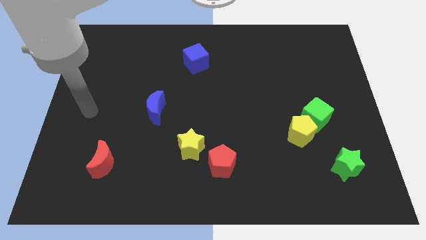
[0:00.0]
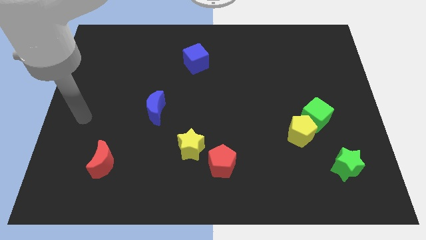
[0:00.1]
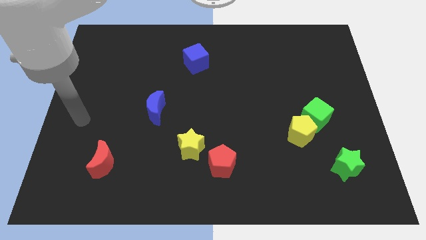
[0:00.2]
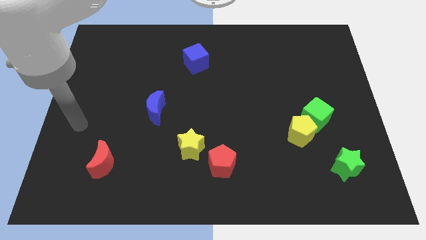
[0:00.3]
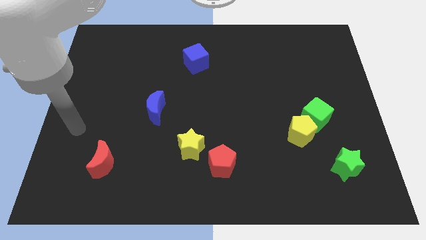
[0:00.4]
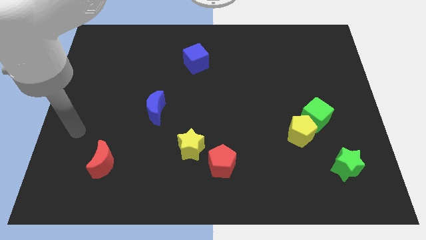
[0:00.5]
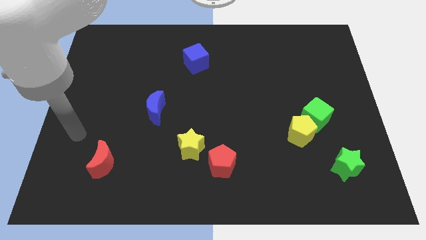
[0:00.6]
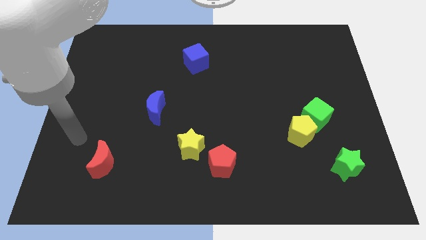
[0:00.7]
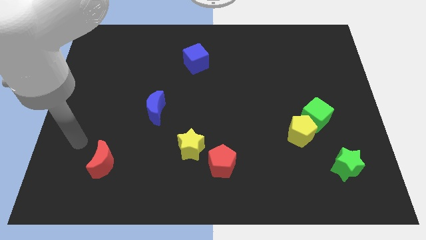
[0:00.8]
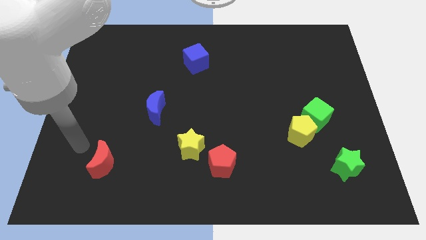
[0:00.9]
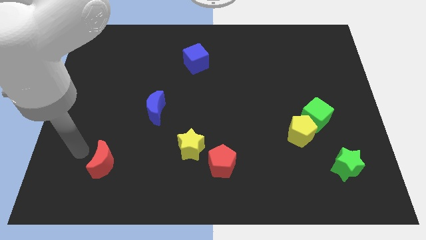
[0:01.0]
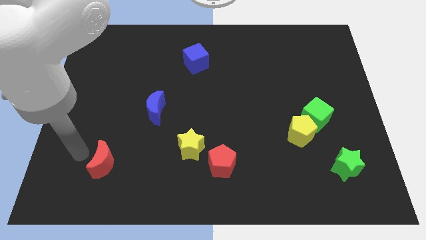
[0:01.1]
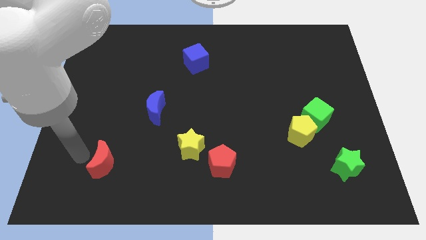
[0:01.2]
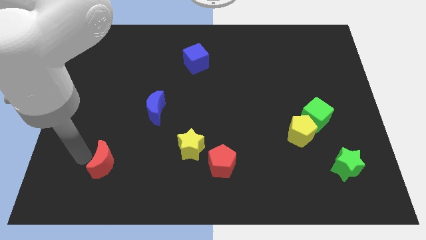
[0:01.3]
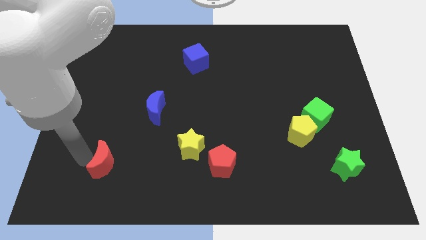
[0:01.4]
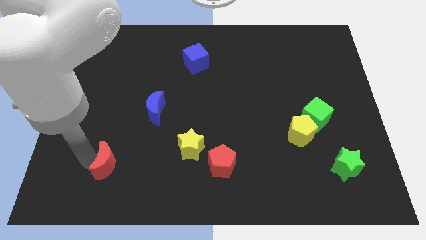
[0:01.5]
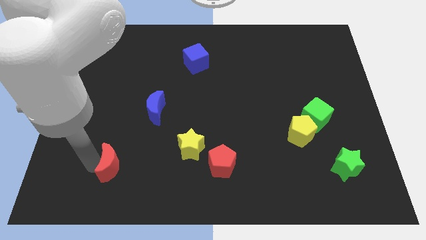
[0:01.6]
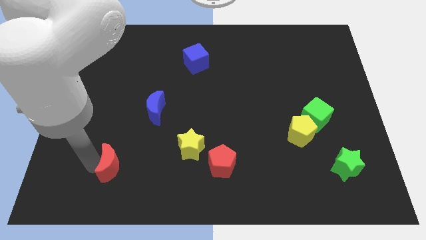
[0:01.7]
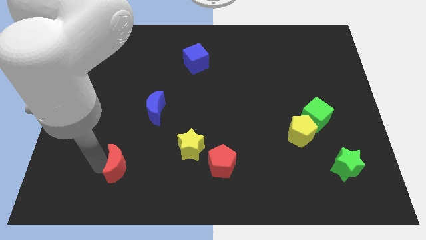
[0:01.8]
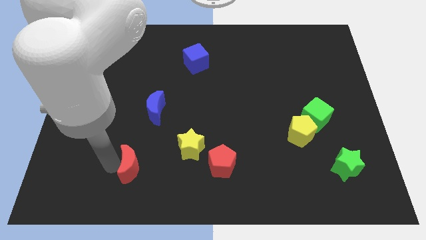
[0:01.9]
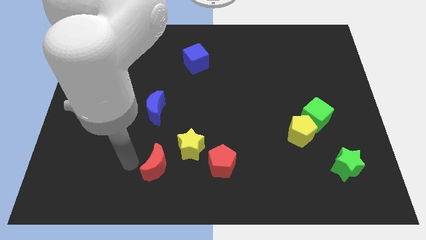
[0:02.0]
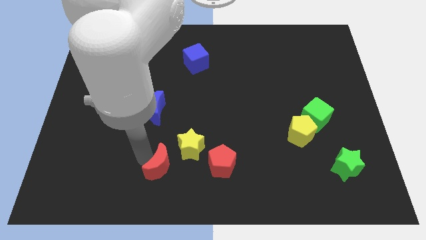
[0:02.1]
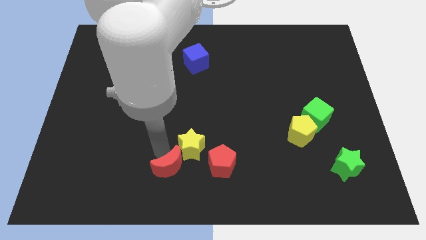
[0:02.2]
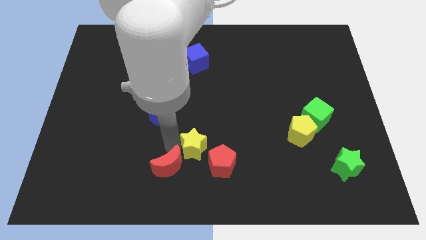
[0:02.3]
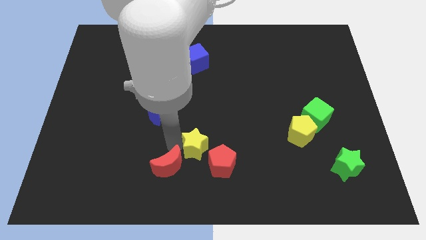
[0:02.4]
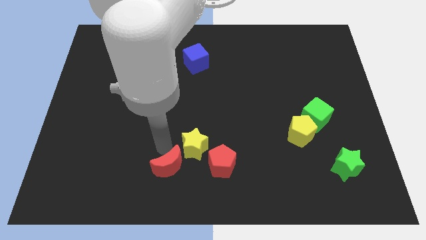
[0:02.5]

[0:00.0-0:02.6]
push the red crescent into the yellow star

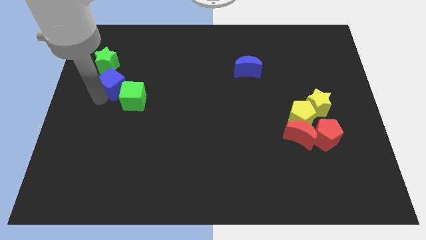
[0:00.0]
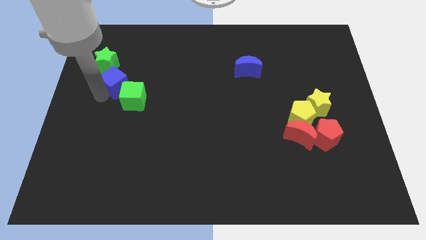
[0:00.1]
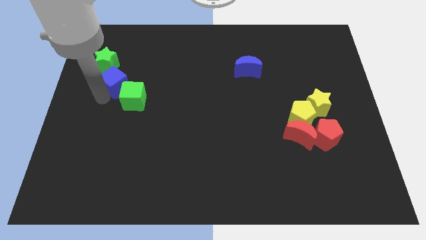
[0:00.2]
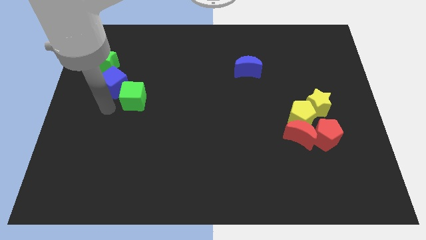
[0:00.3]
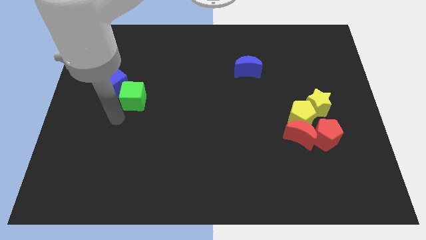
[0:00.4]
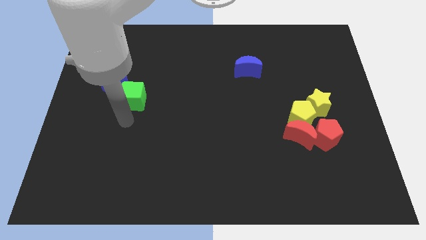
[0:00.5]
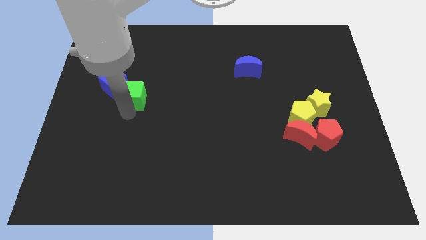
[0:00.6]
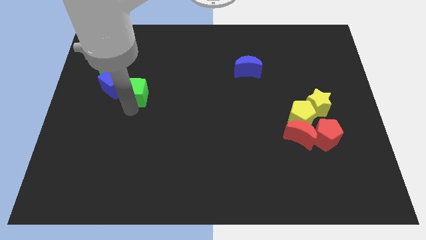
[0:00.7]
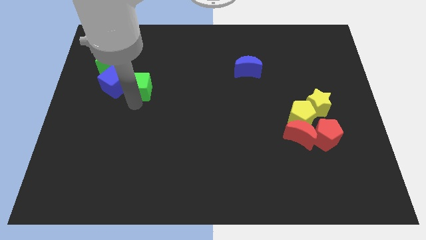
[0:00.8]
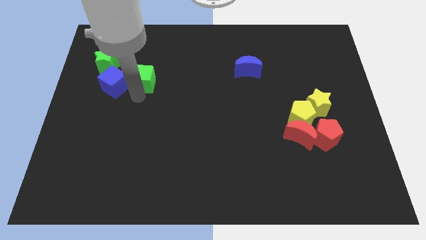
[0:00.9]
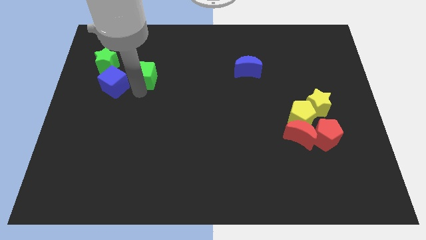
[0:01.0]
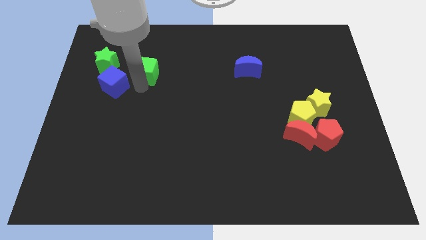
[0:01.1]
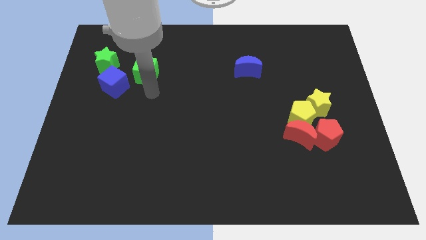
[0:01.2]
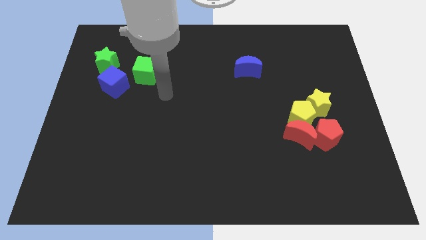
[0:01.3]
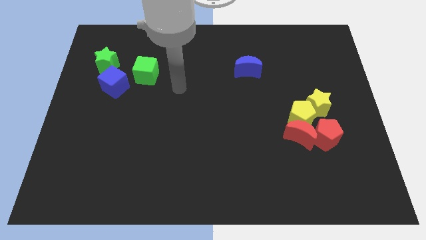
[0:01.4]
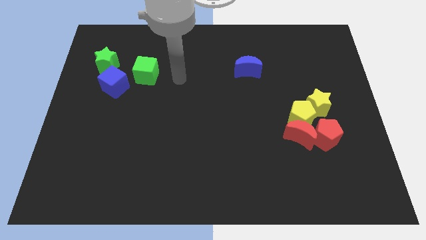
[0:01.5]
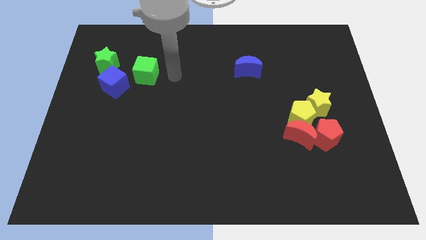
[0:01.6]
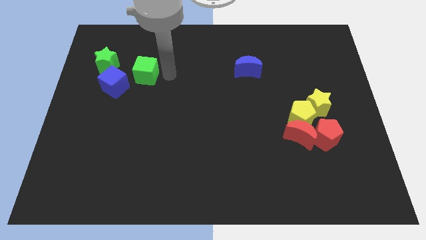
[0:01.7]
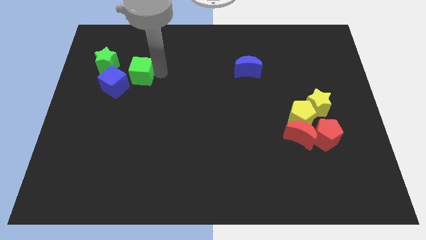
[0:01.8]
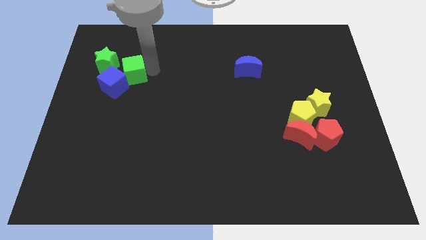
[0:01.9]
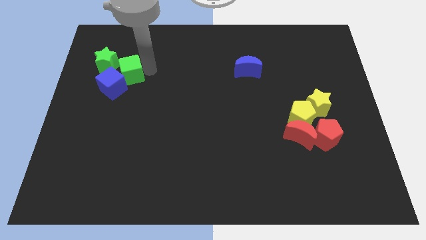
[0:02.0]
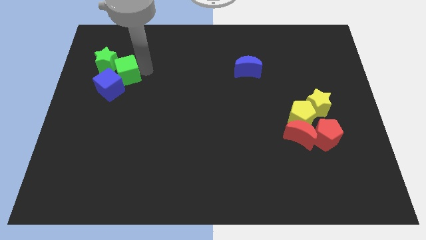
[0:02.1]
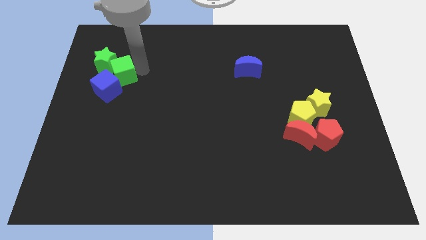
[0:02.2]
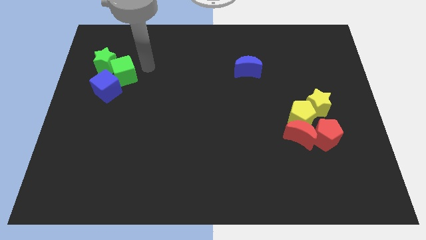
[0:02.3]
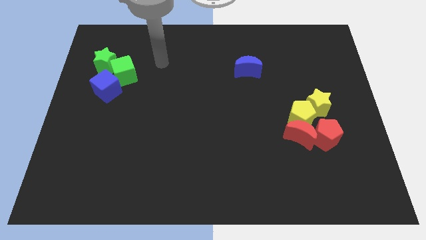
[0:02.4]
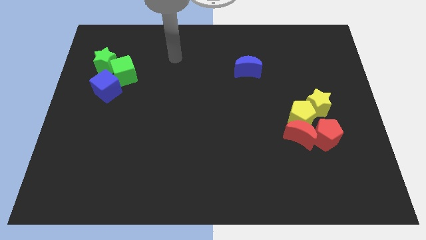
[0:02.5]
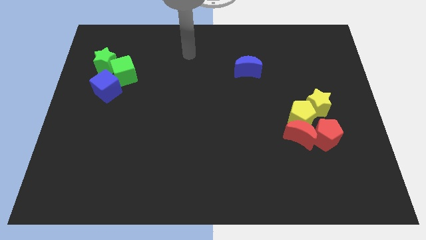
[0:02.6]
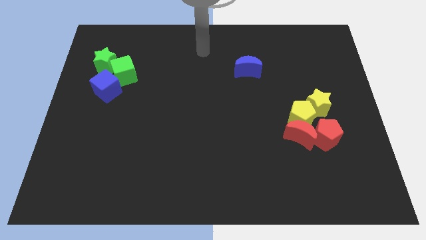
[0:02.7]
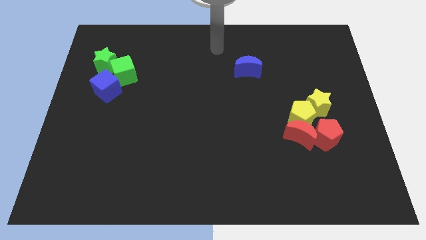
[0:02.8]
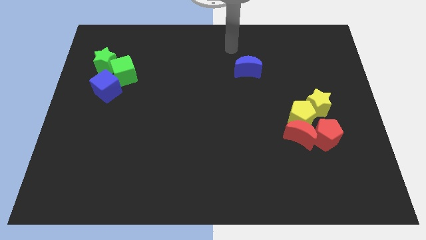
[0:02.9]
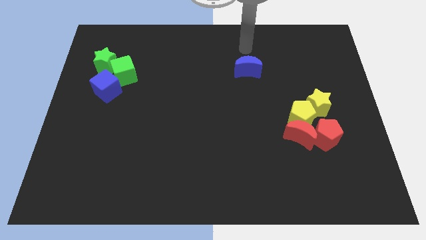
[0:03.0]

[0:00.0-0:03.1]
slide the green cube into the group of blocks

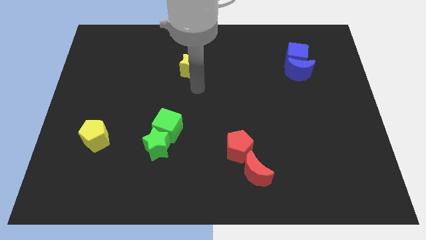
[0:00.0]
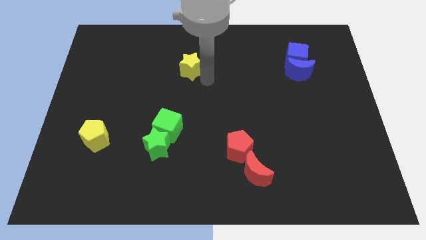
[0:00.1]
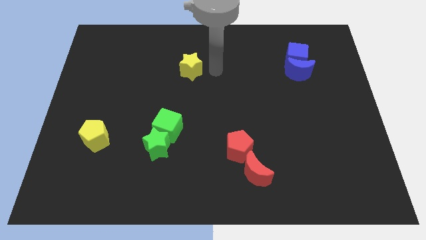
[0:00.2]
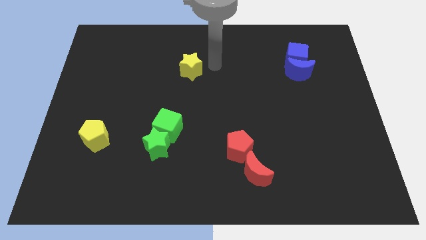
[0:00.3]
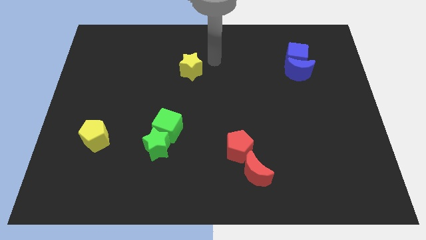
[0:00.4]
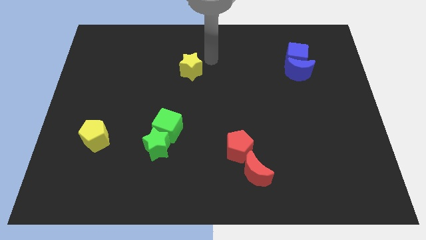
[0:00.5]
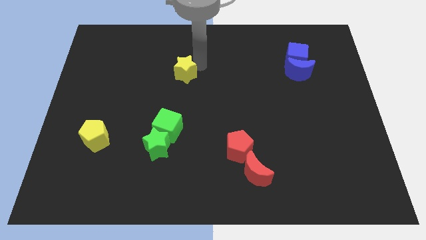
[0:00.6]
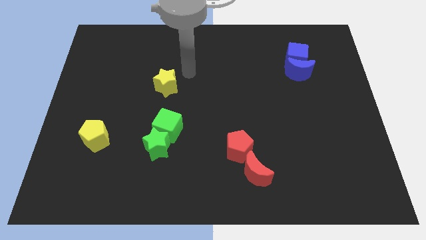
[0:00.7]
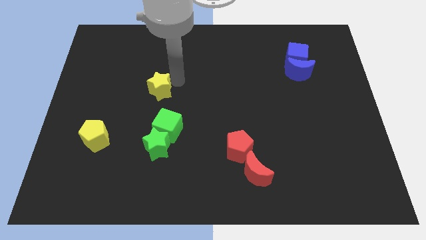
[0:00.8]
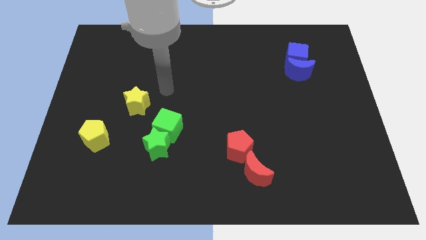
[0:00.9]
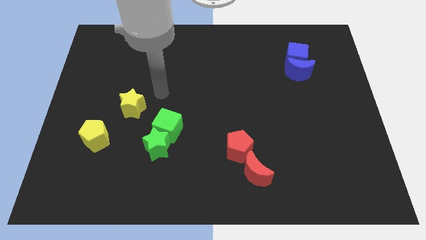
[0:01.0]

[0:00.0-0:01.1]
place the yellow star diagonally right to the yellow pentagon

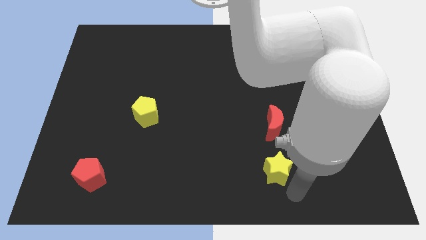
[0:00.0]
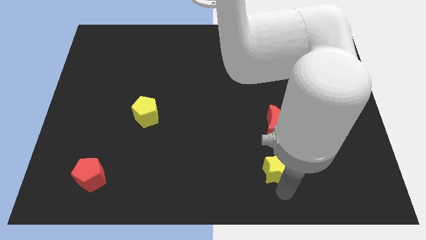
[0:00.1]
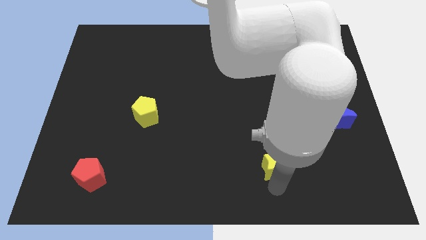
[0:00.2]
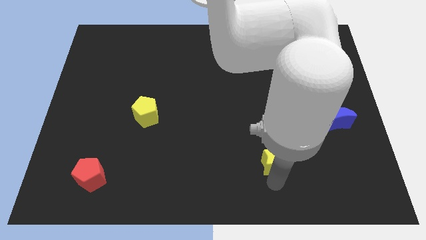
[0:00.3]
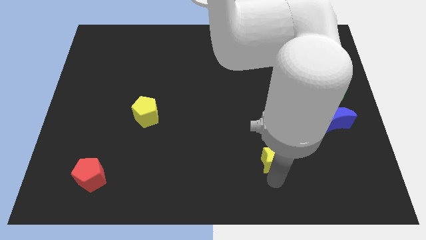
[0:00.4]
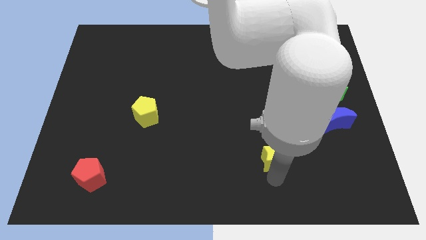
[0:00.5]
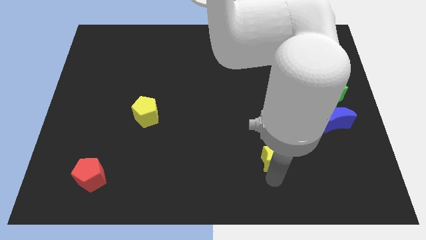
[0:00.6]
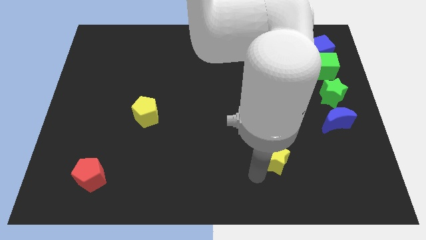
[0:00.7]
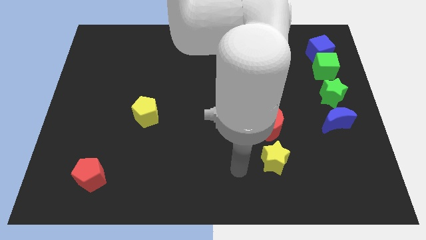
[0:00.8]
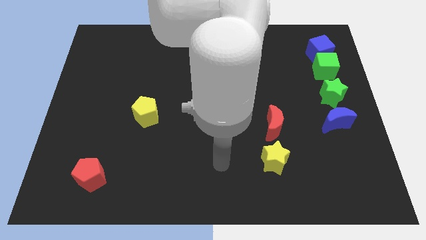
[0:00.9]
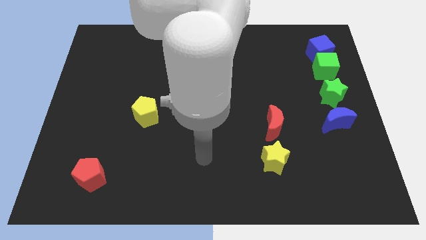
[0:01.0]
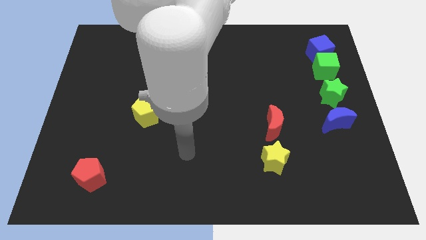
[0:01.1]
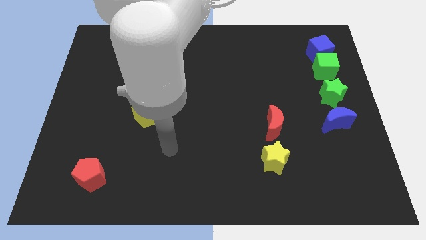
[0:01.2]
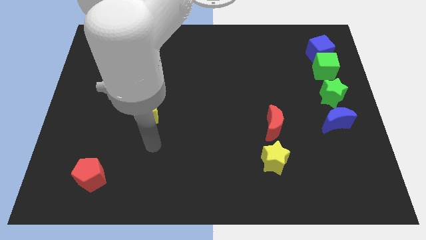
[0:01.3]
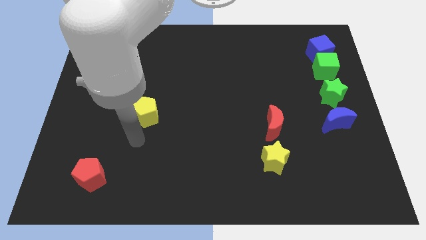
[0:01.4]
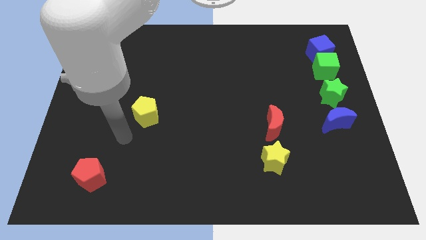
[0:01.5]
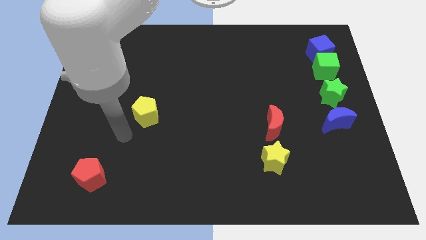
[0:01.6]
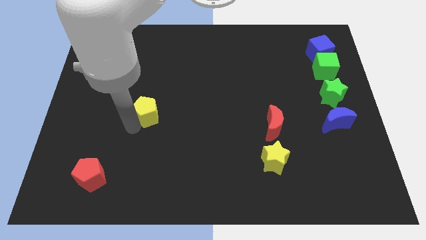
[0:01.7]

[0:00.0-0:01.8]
move your arm close to the yellow pentagon

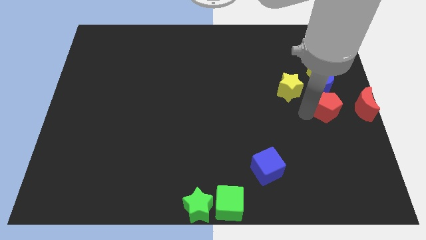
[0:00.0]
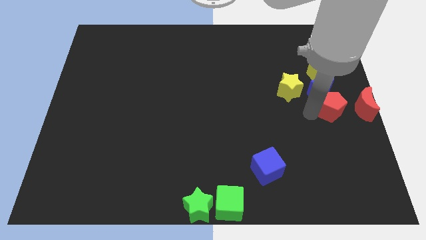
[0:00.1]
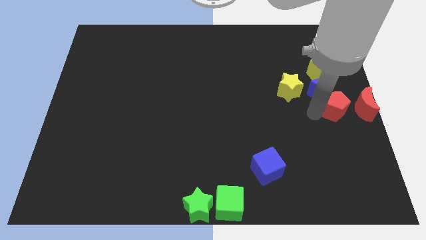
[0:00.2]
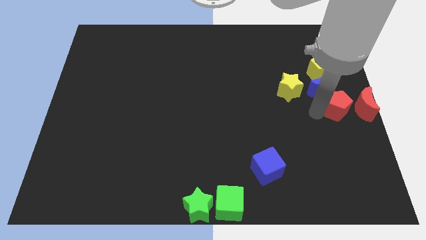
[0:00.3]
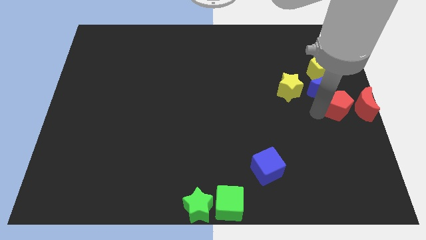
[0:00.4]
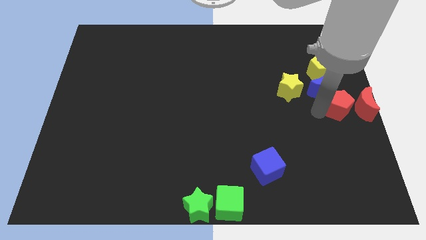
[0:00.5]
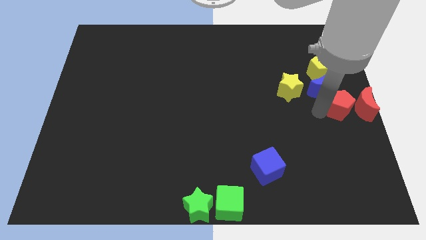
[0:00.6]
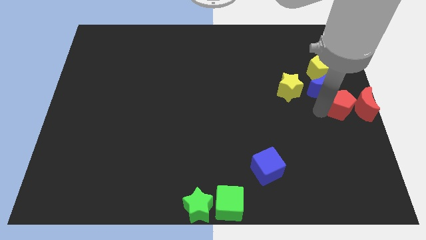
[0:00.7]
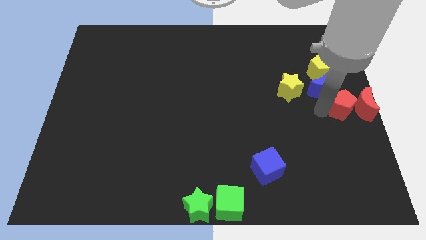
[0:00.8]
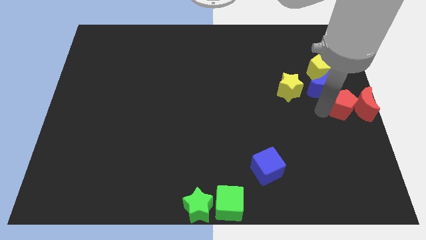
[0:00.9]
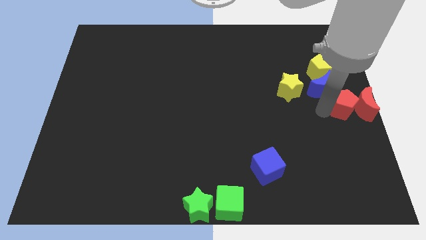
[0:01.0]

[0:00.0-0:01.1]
move the red pentagon beside the red crescent
